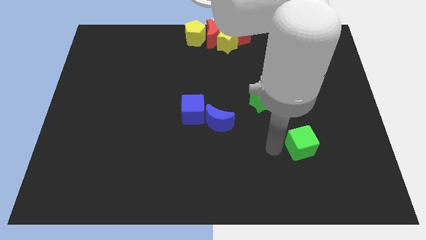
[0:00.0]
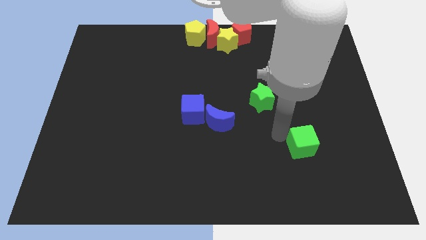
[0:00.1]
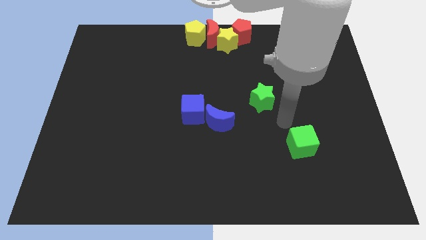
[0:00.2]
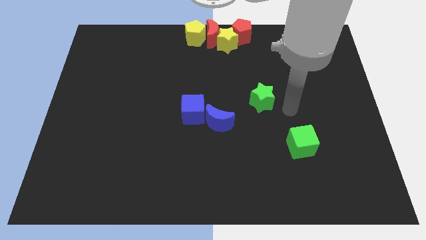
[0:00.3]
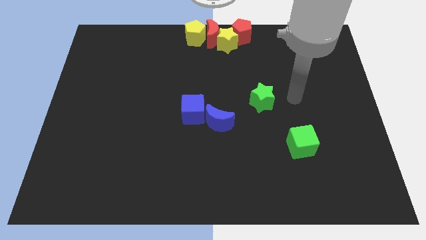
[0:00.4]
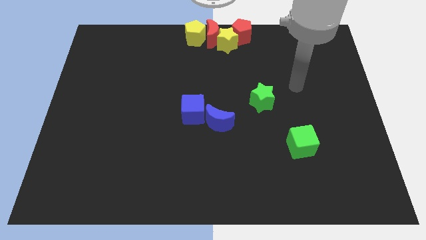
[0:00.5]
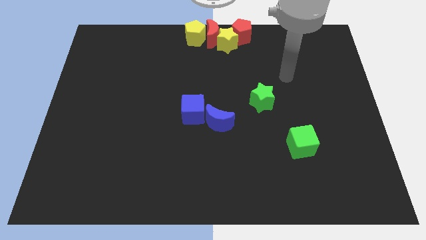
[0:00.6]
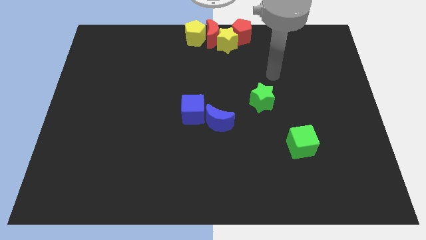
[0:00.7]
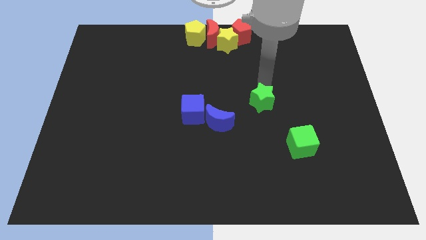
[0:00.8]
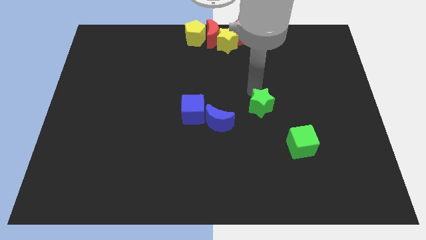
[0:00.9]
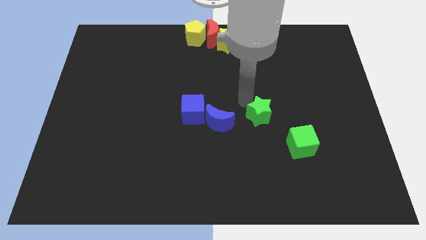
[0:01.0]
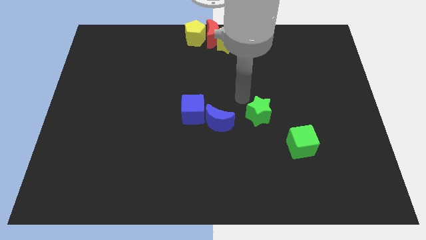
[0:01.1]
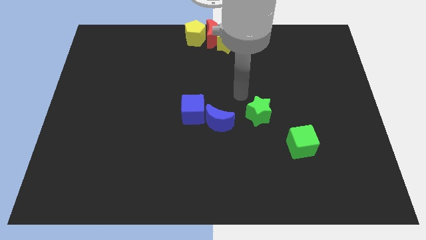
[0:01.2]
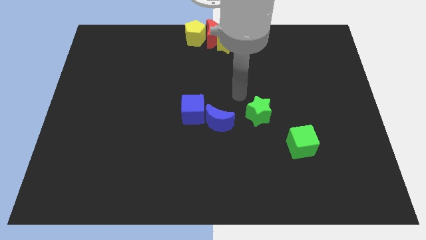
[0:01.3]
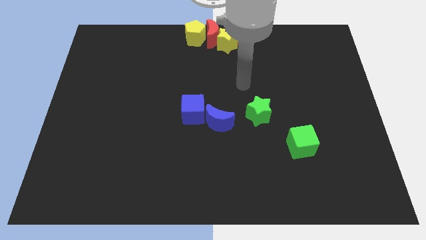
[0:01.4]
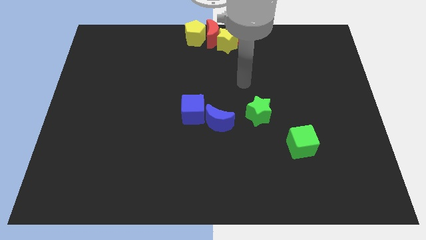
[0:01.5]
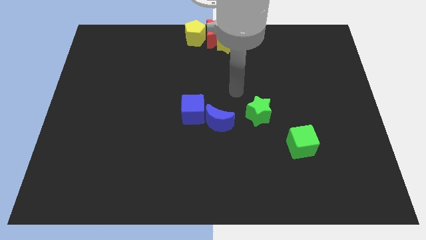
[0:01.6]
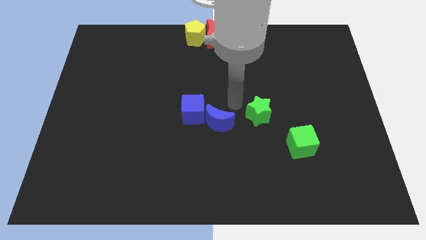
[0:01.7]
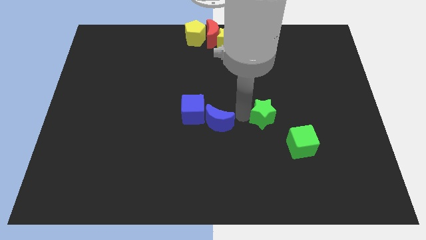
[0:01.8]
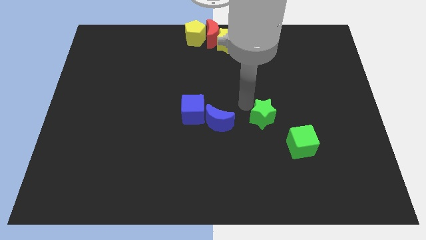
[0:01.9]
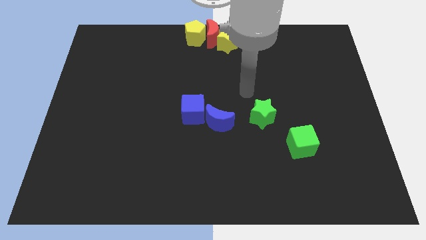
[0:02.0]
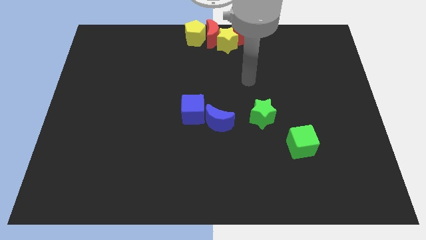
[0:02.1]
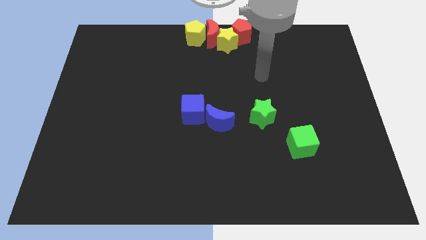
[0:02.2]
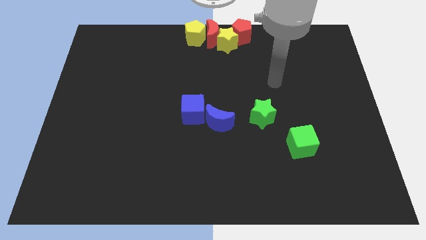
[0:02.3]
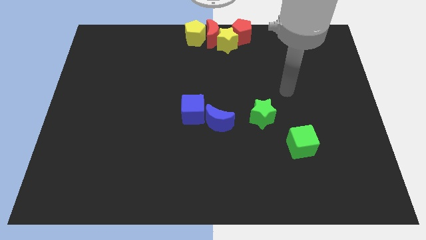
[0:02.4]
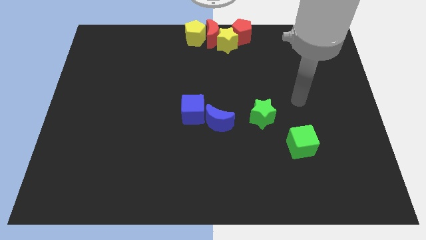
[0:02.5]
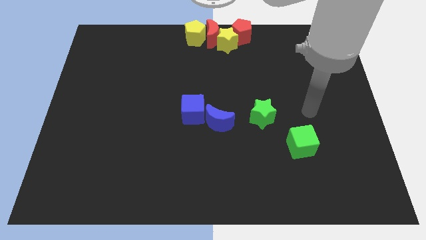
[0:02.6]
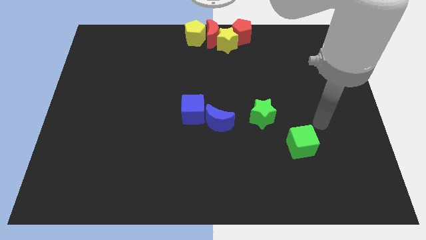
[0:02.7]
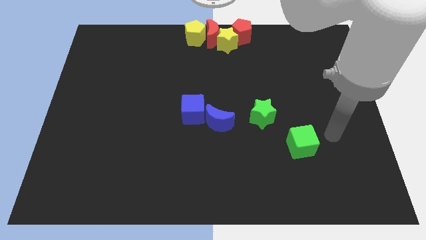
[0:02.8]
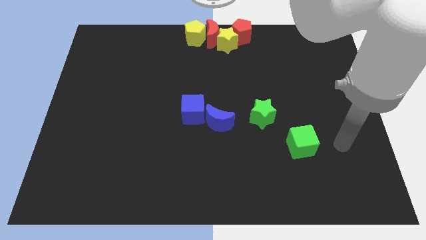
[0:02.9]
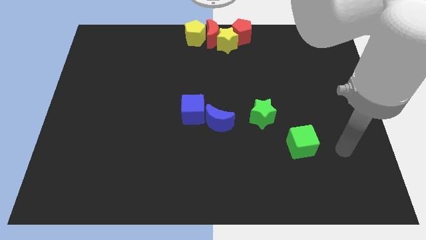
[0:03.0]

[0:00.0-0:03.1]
push green star slightly down

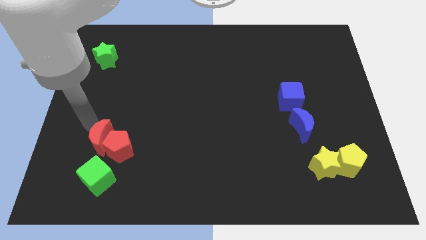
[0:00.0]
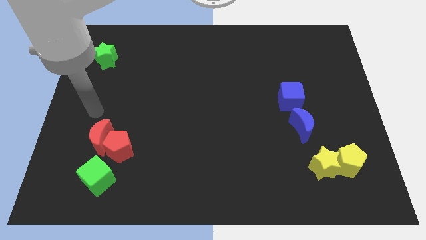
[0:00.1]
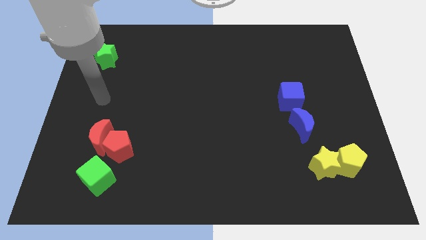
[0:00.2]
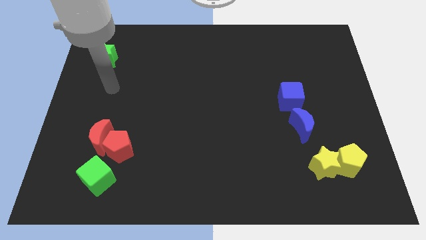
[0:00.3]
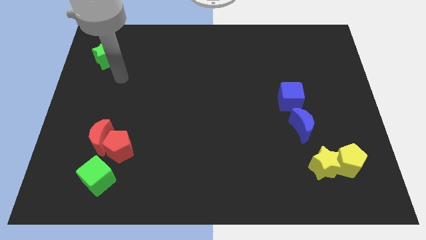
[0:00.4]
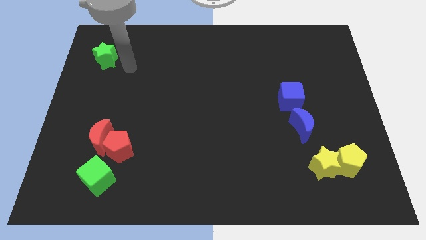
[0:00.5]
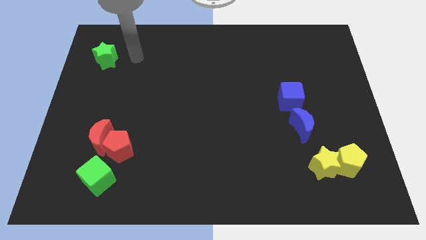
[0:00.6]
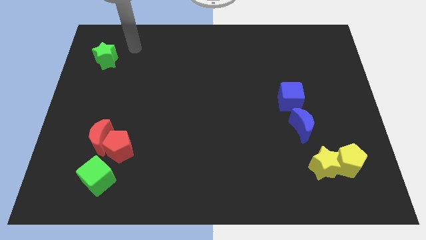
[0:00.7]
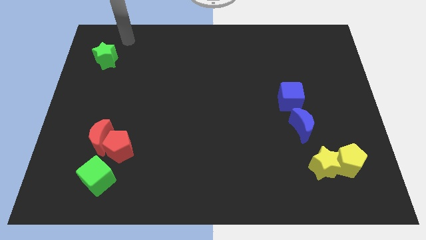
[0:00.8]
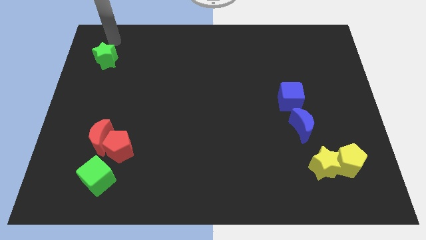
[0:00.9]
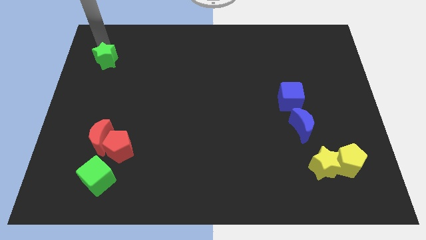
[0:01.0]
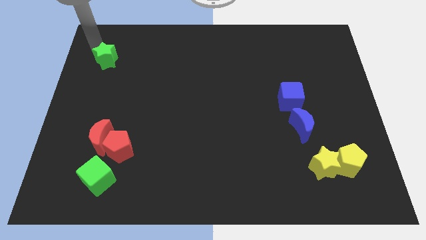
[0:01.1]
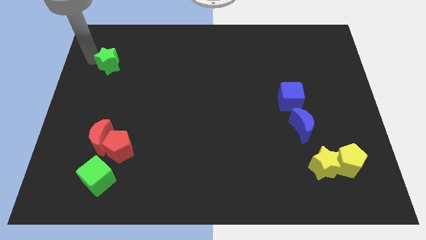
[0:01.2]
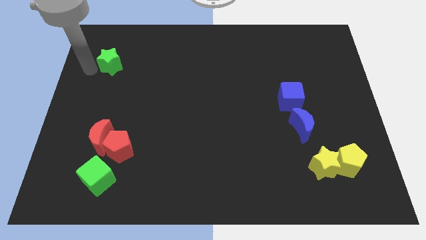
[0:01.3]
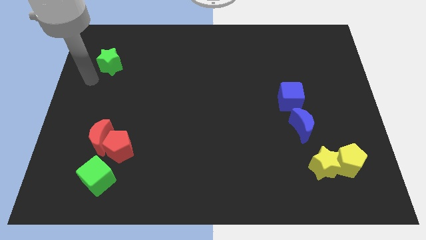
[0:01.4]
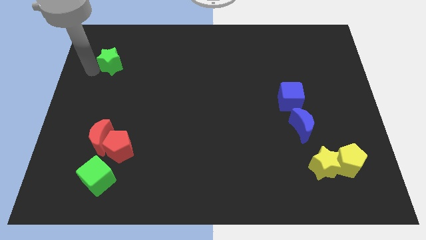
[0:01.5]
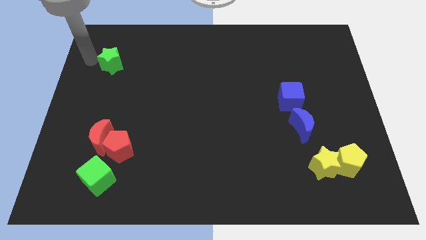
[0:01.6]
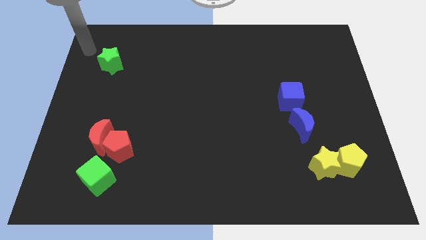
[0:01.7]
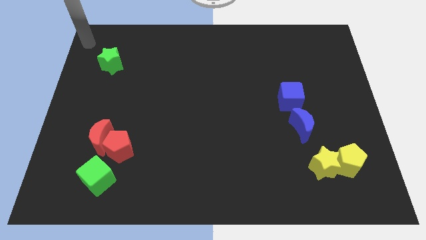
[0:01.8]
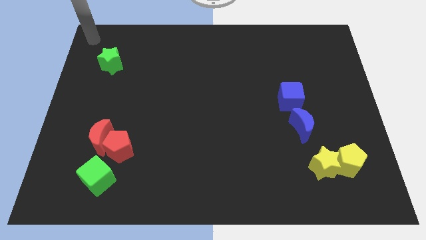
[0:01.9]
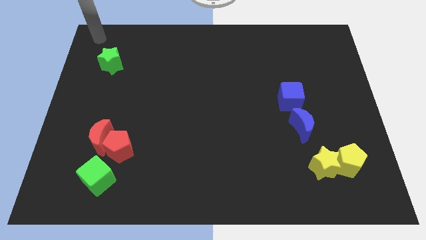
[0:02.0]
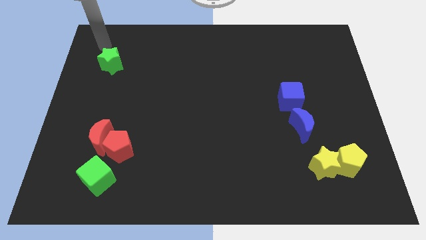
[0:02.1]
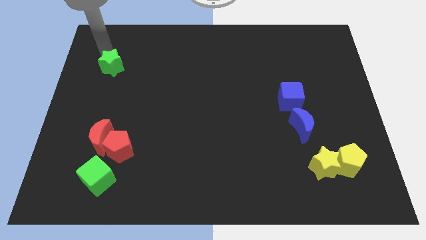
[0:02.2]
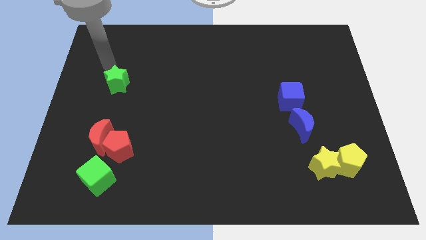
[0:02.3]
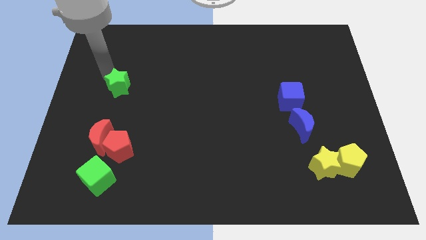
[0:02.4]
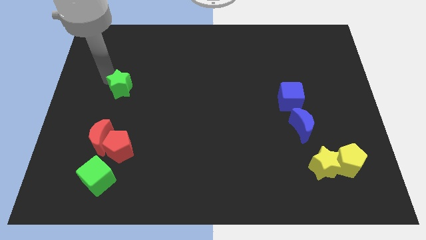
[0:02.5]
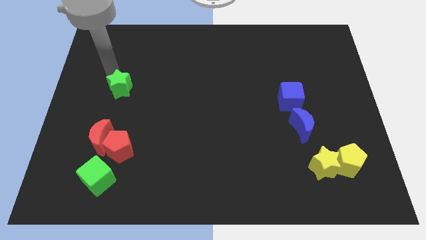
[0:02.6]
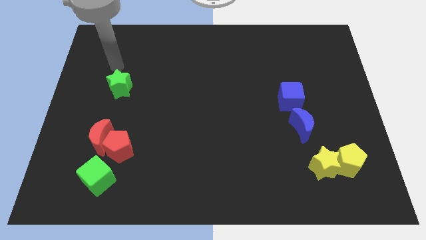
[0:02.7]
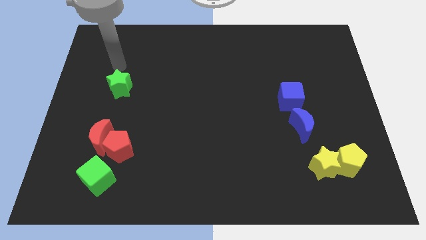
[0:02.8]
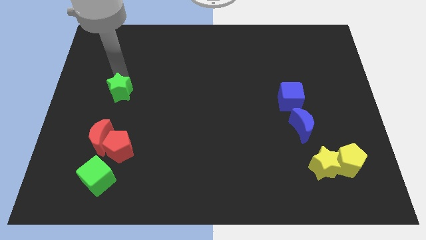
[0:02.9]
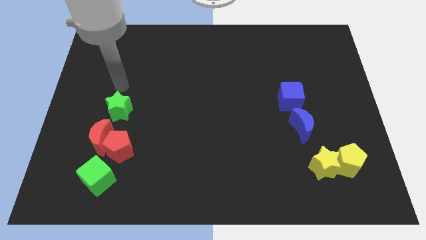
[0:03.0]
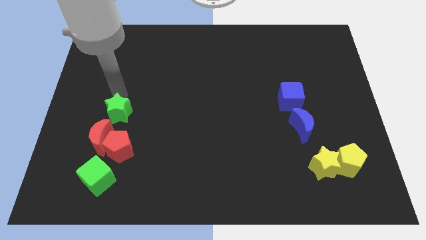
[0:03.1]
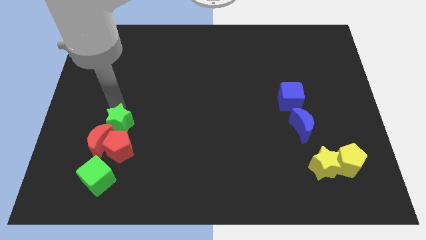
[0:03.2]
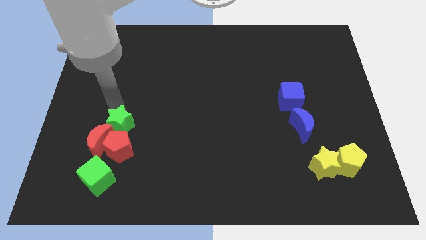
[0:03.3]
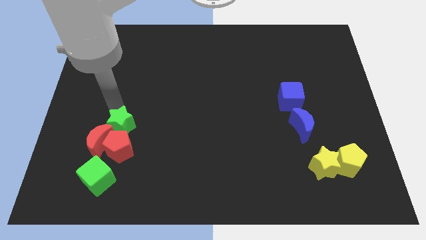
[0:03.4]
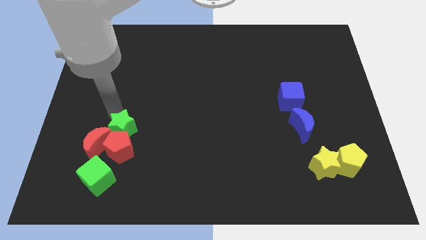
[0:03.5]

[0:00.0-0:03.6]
push the green star to the top of the red pentagon

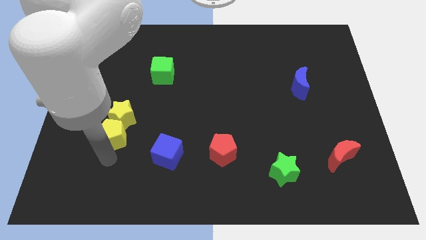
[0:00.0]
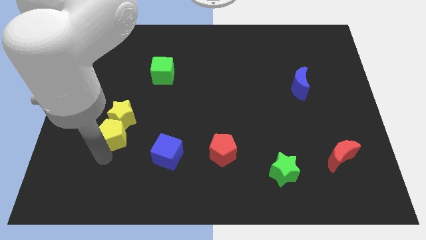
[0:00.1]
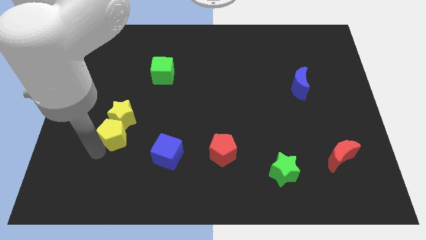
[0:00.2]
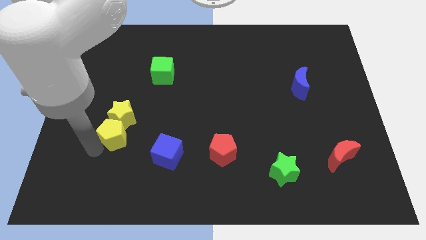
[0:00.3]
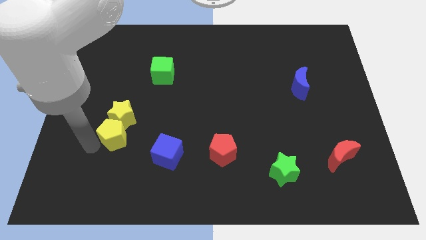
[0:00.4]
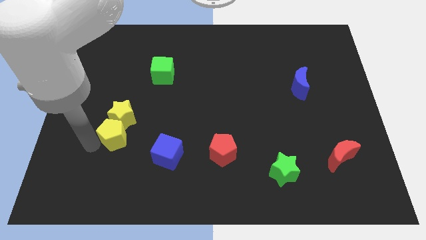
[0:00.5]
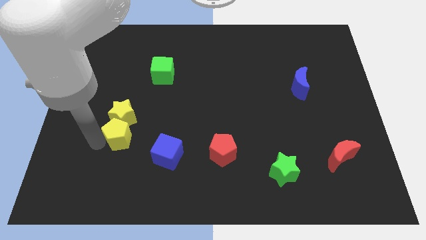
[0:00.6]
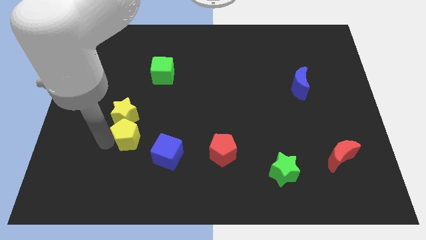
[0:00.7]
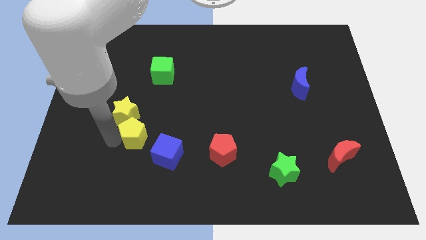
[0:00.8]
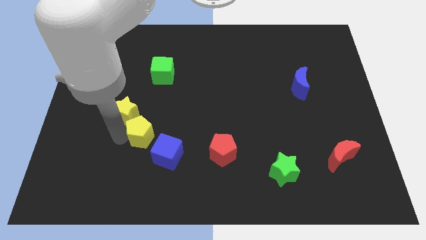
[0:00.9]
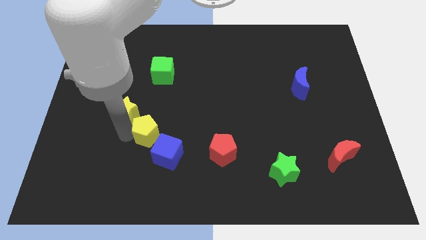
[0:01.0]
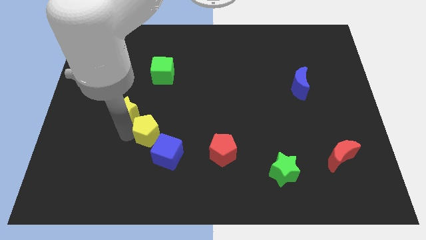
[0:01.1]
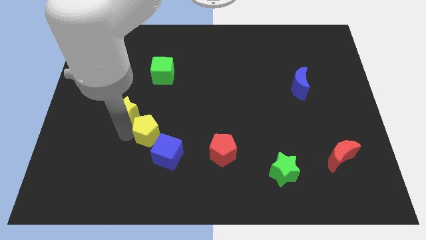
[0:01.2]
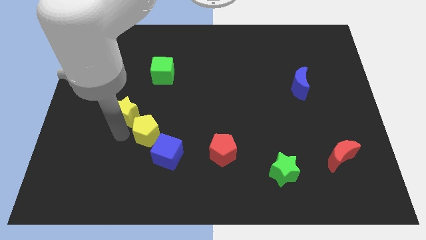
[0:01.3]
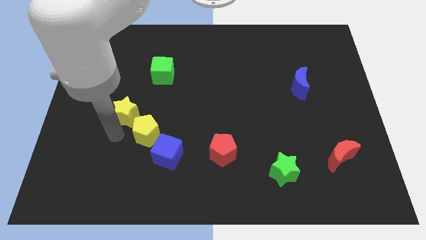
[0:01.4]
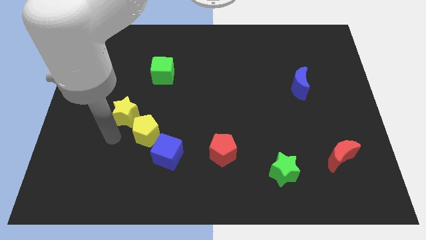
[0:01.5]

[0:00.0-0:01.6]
move the yellow pentagon below the green cube

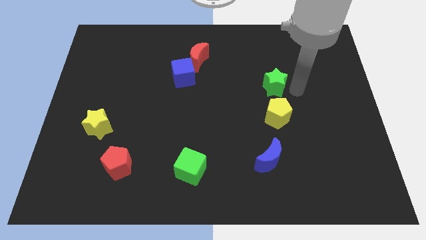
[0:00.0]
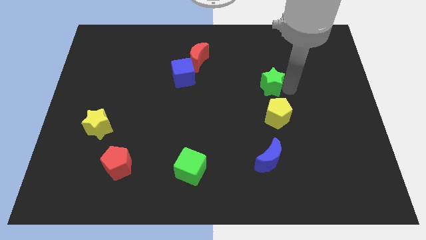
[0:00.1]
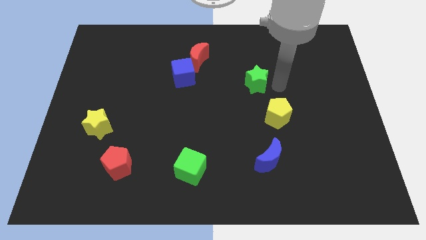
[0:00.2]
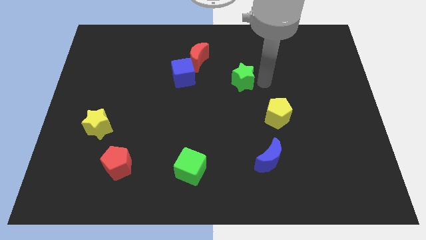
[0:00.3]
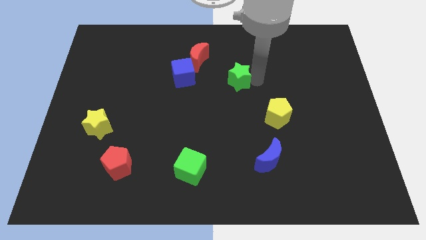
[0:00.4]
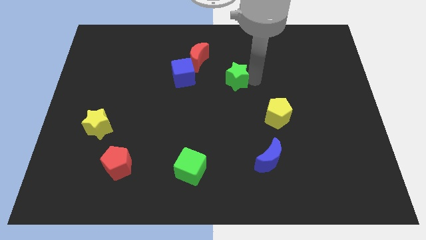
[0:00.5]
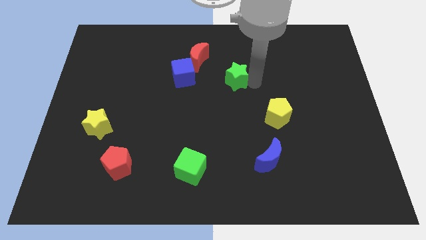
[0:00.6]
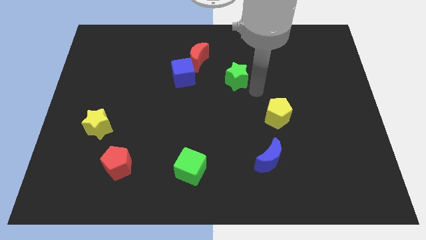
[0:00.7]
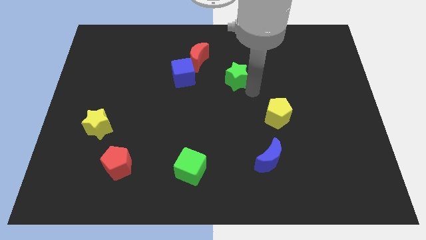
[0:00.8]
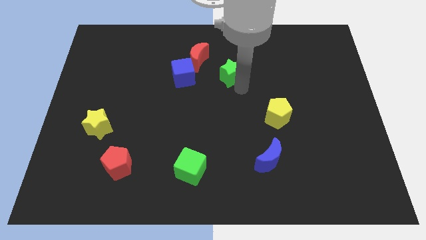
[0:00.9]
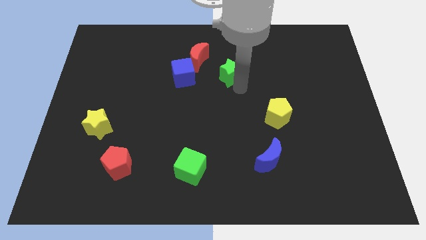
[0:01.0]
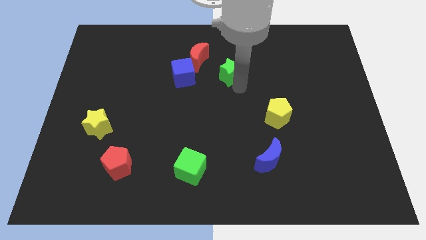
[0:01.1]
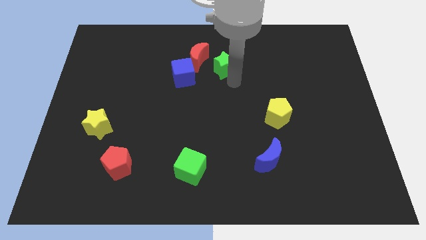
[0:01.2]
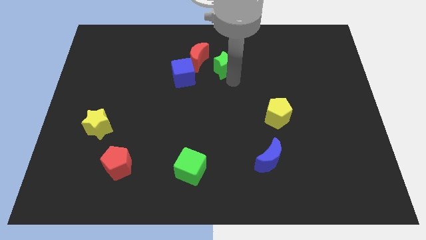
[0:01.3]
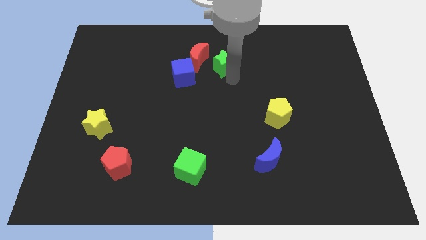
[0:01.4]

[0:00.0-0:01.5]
move green star towards red crescent
